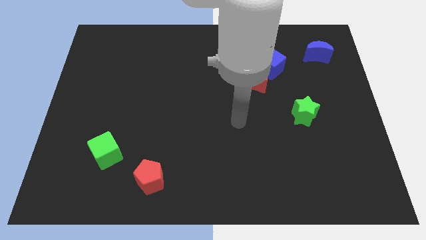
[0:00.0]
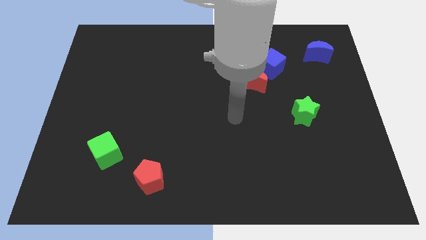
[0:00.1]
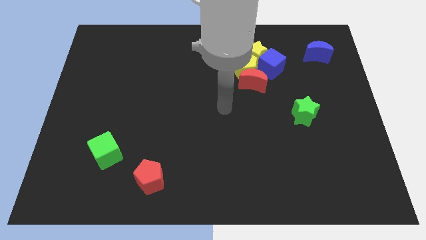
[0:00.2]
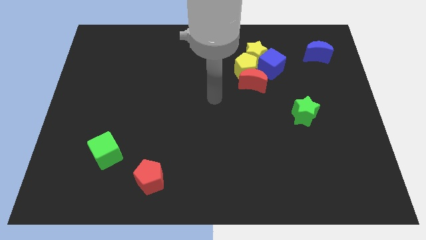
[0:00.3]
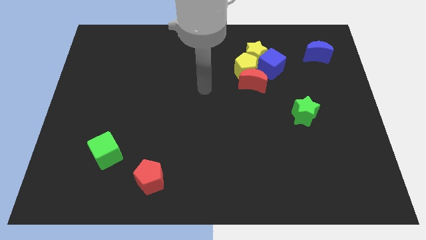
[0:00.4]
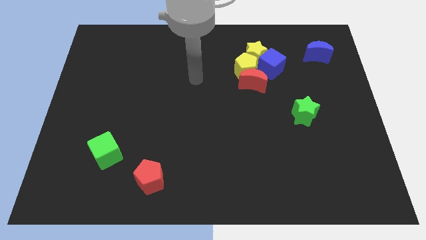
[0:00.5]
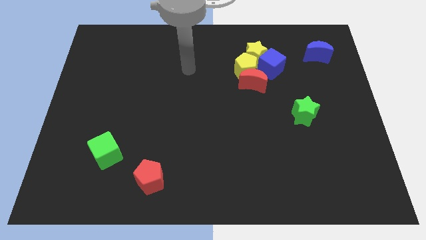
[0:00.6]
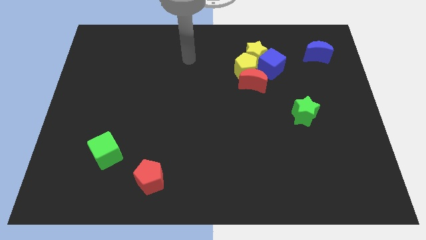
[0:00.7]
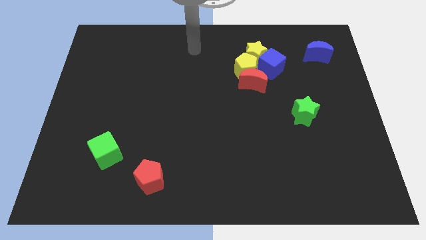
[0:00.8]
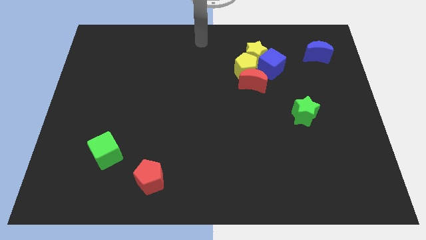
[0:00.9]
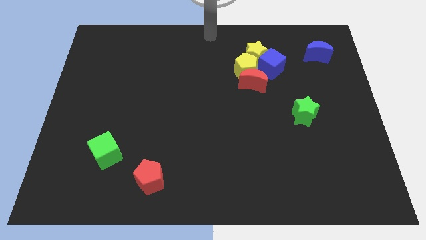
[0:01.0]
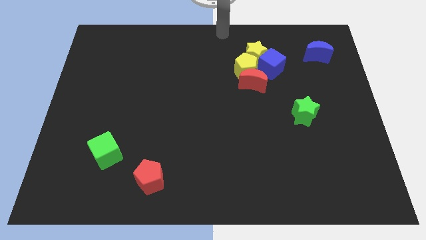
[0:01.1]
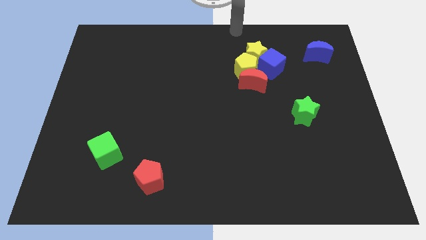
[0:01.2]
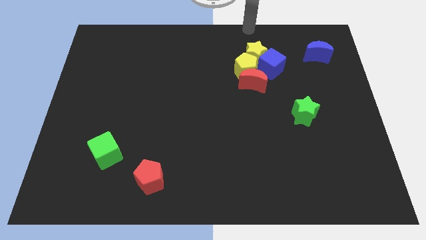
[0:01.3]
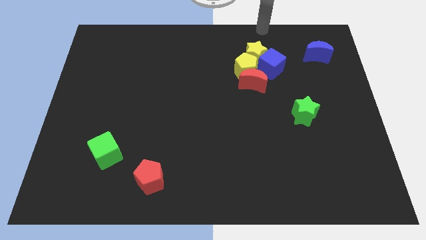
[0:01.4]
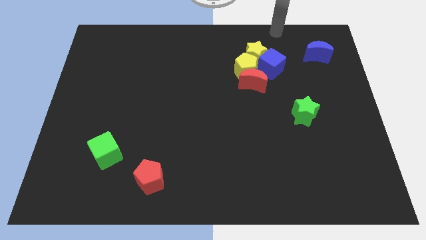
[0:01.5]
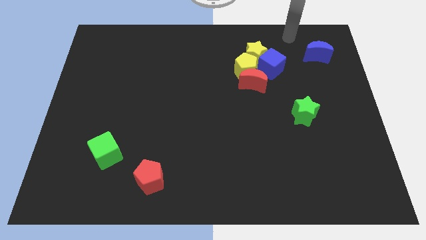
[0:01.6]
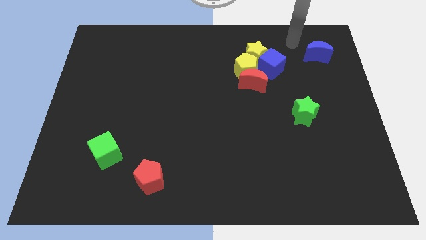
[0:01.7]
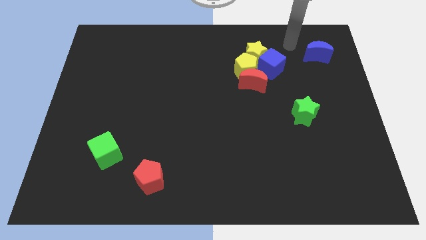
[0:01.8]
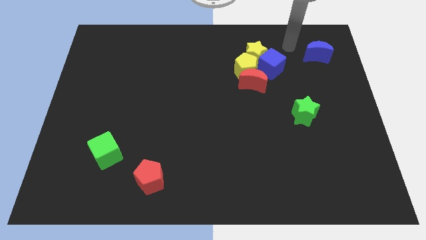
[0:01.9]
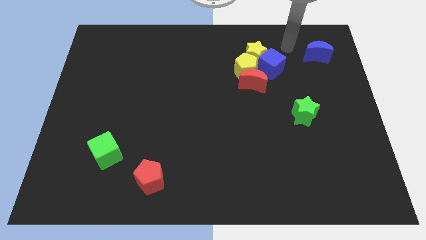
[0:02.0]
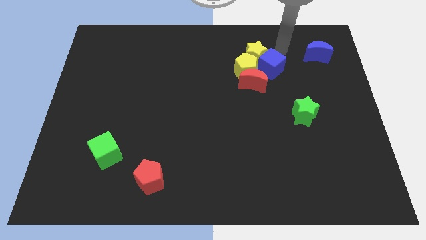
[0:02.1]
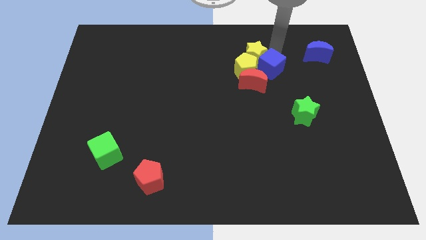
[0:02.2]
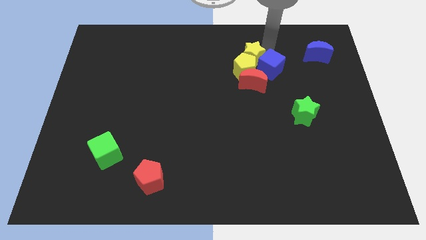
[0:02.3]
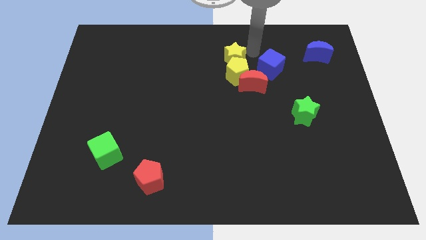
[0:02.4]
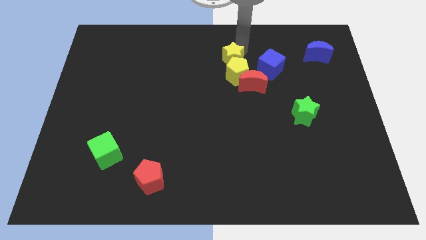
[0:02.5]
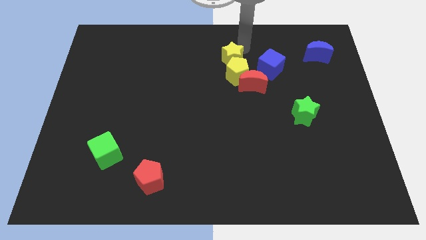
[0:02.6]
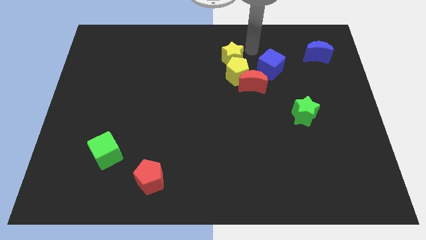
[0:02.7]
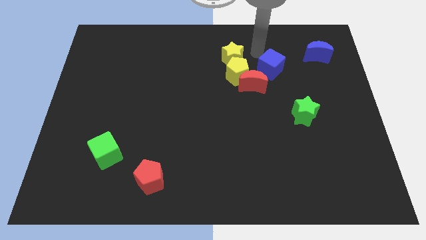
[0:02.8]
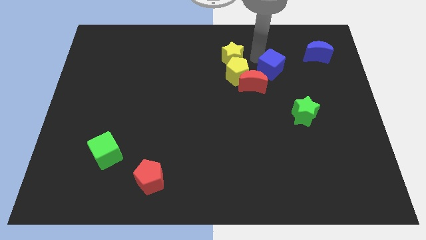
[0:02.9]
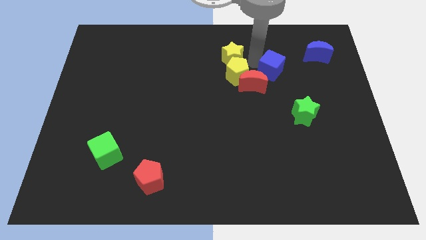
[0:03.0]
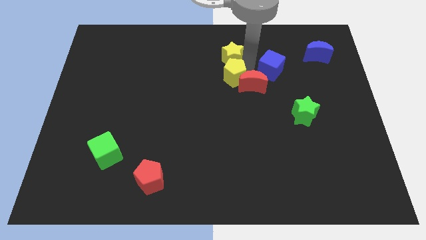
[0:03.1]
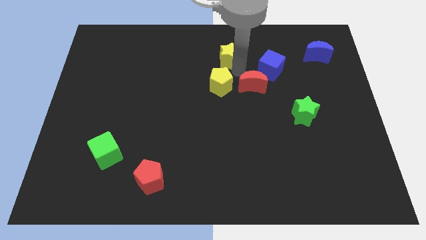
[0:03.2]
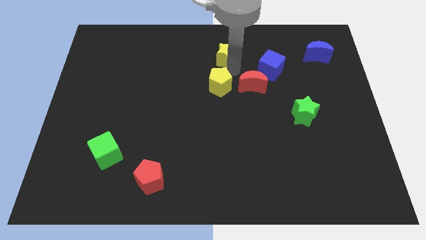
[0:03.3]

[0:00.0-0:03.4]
separate yellow pentagon from blue cube

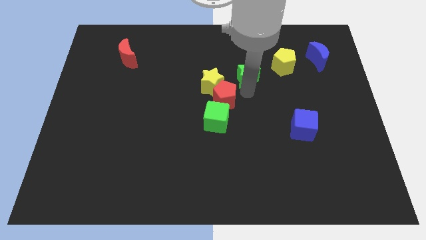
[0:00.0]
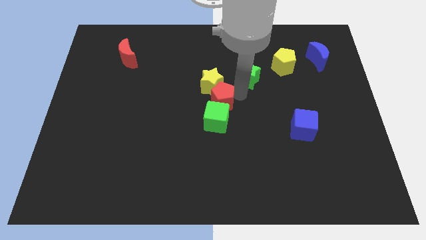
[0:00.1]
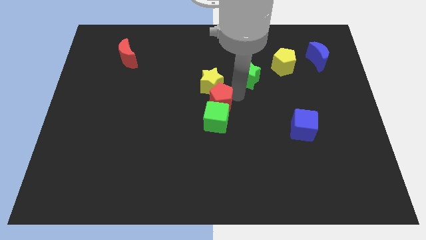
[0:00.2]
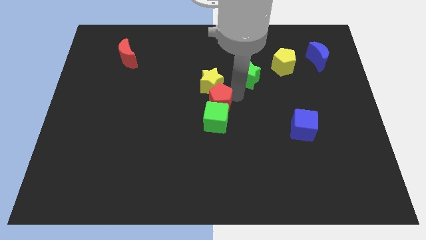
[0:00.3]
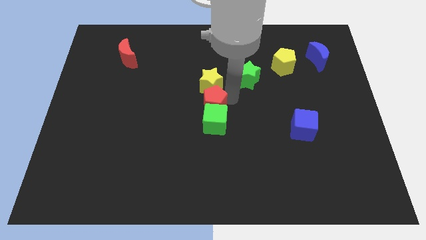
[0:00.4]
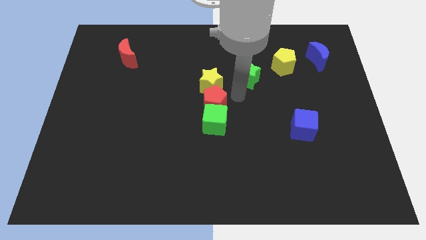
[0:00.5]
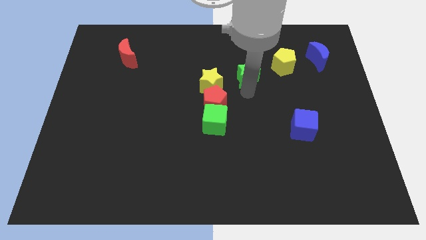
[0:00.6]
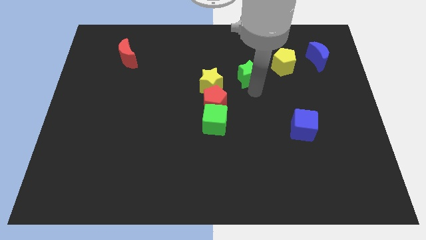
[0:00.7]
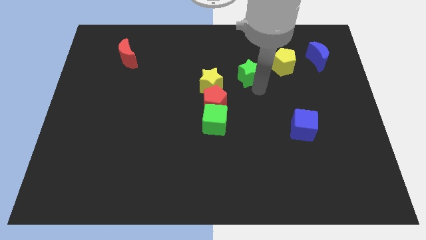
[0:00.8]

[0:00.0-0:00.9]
place red pentagon in between yellow star and green cube

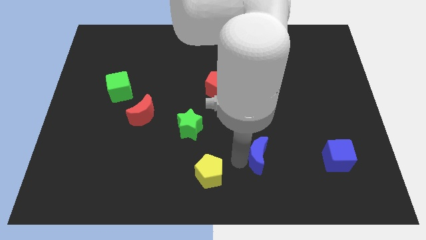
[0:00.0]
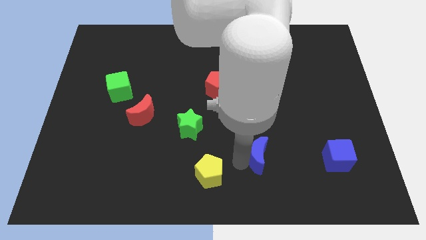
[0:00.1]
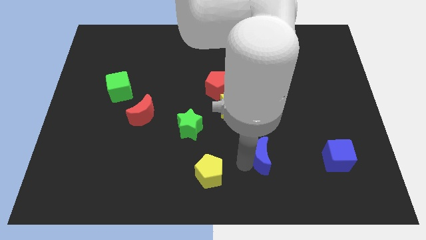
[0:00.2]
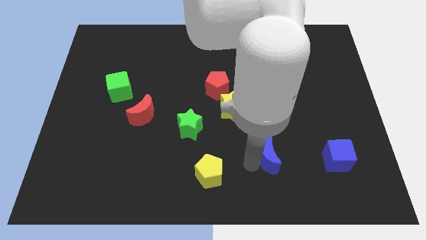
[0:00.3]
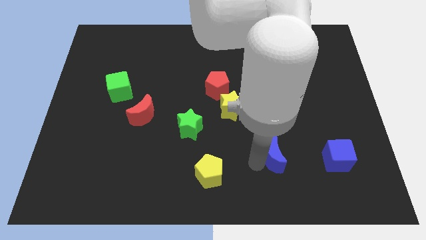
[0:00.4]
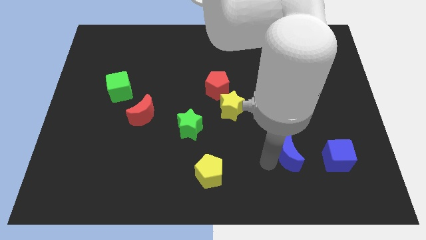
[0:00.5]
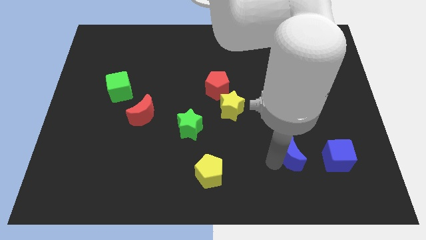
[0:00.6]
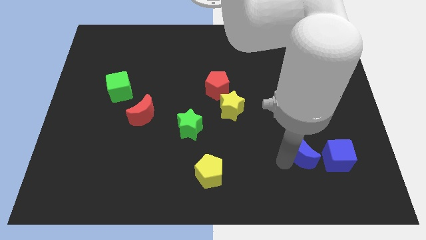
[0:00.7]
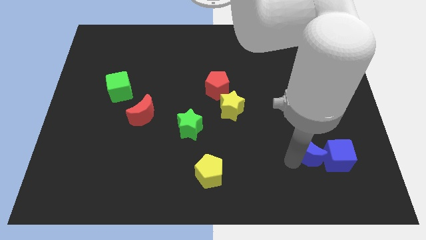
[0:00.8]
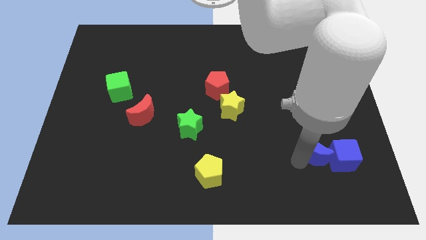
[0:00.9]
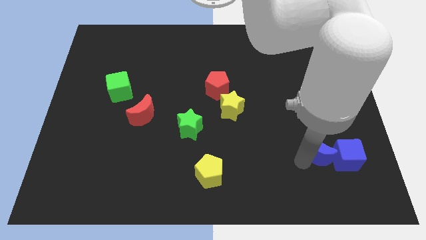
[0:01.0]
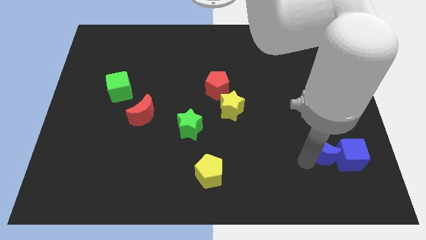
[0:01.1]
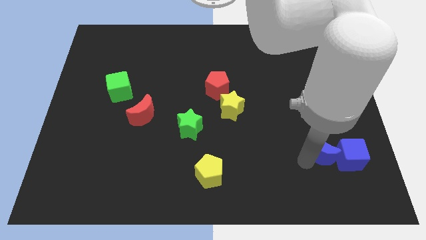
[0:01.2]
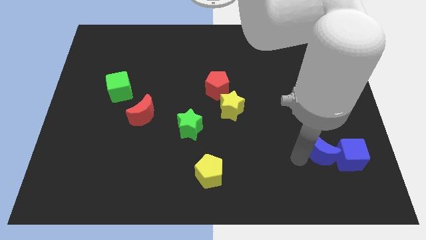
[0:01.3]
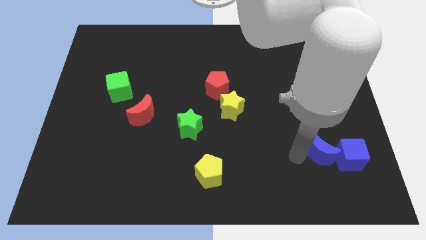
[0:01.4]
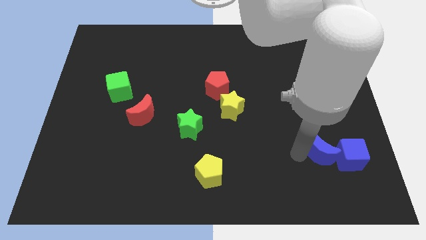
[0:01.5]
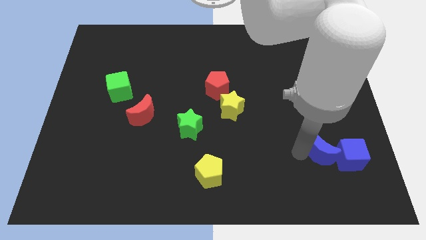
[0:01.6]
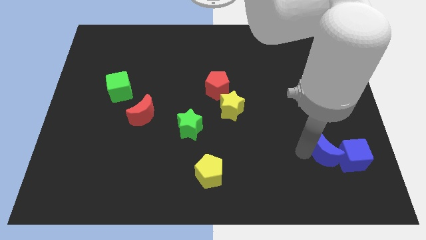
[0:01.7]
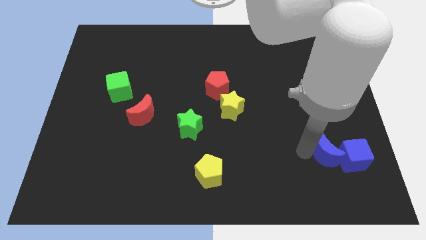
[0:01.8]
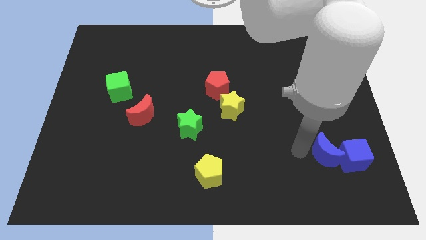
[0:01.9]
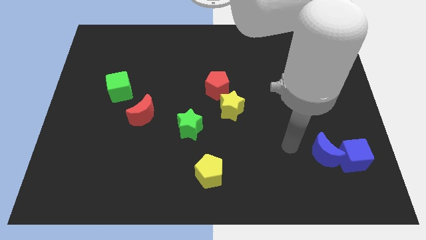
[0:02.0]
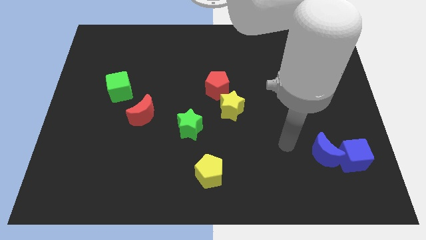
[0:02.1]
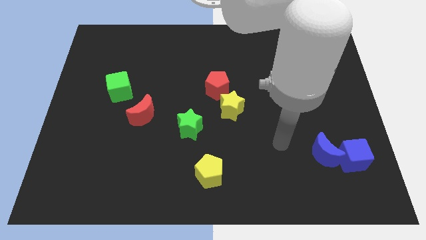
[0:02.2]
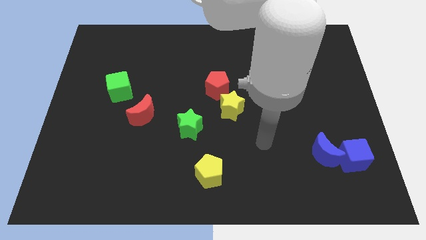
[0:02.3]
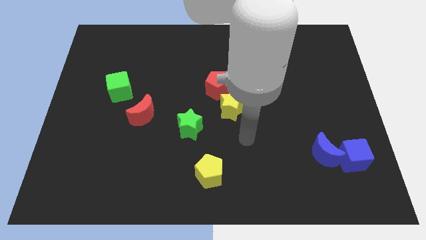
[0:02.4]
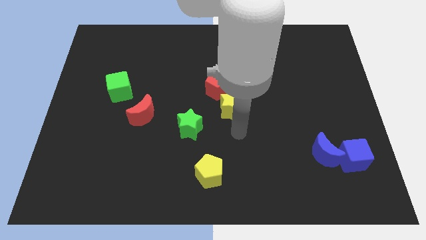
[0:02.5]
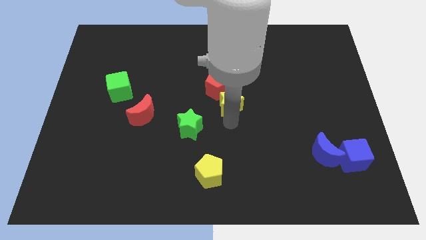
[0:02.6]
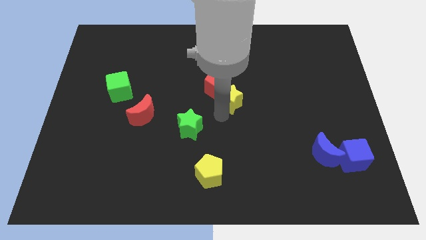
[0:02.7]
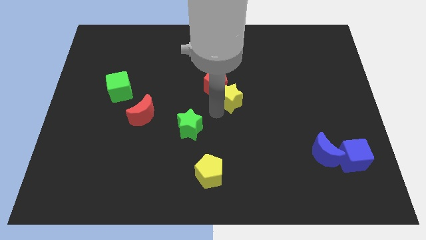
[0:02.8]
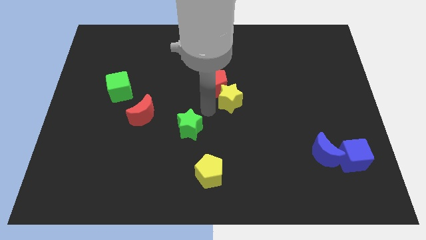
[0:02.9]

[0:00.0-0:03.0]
move the blue moon and blue cube to the bottom right side of the board

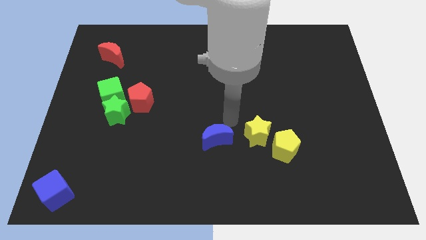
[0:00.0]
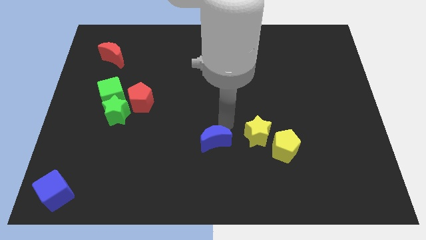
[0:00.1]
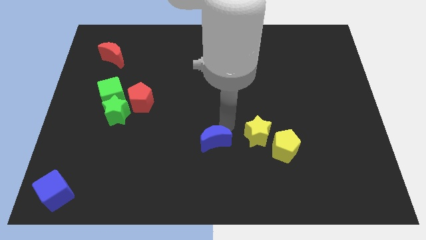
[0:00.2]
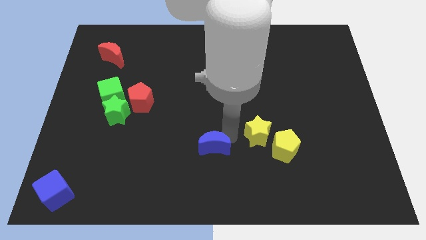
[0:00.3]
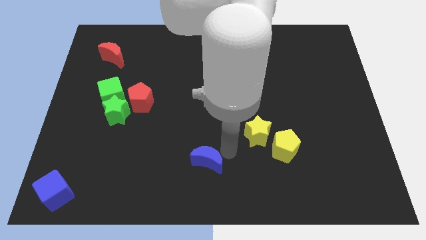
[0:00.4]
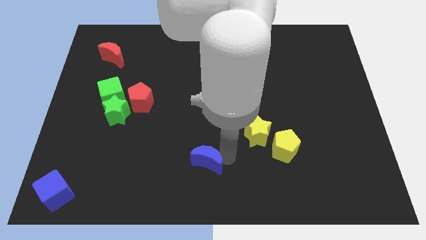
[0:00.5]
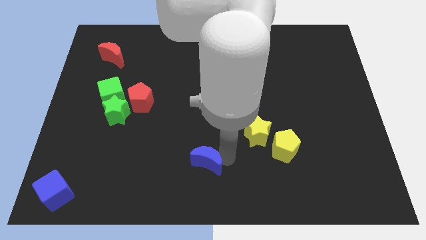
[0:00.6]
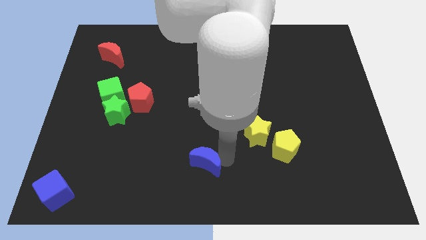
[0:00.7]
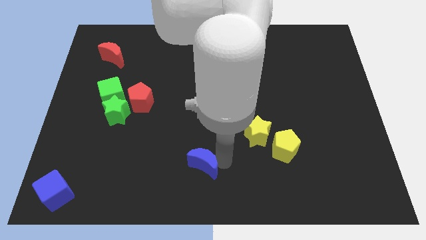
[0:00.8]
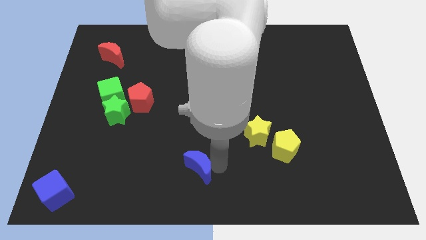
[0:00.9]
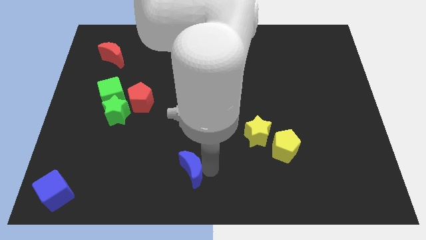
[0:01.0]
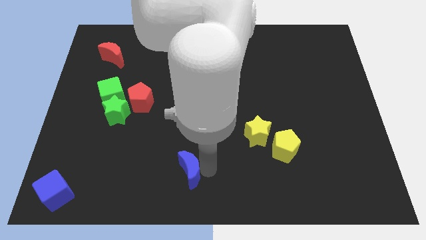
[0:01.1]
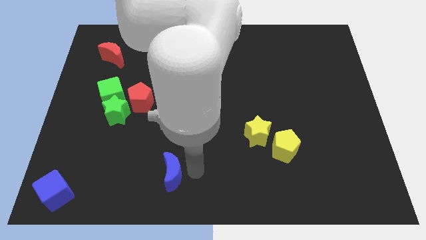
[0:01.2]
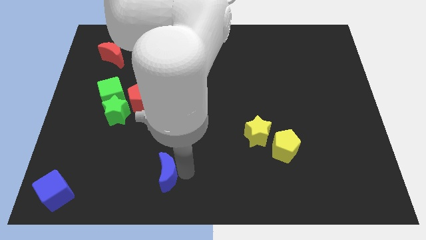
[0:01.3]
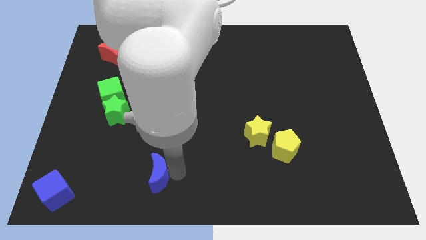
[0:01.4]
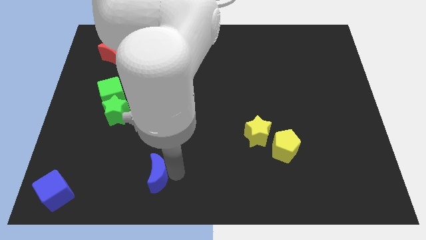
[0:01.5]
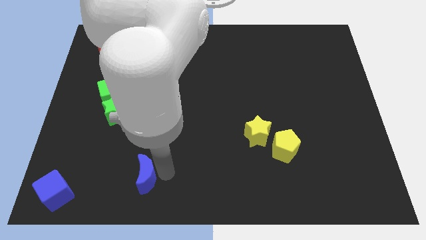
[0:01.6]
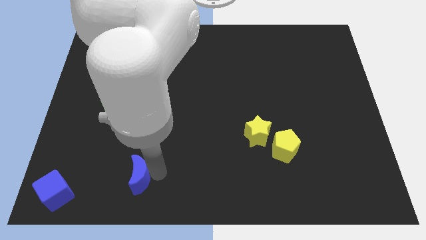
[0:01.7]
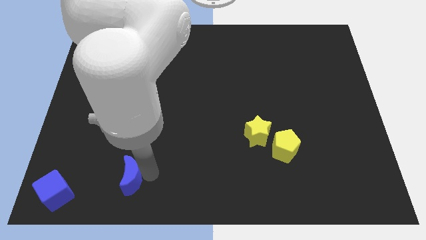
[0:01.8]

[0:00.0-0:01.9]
push the blue moon close to the blue cube
